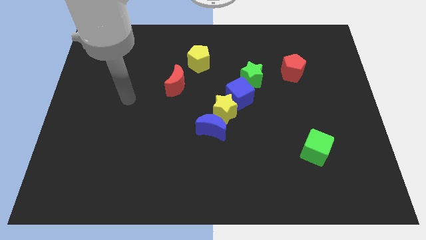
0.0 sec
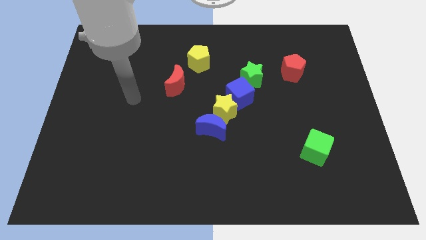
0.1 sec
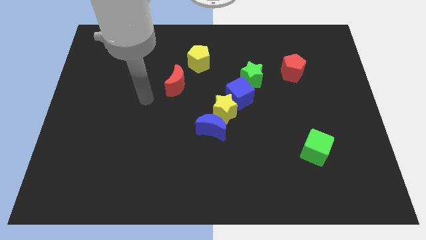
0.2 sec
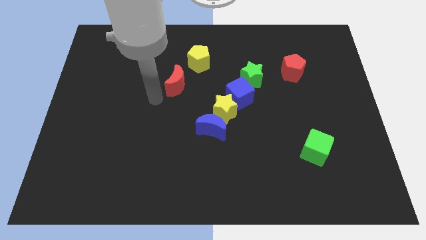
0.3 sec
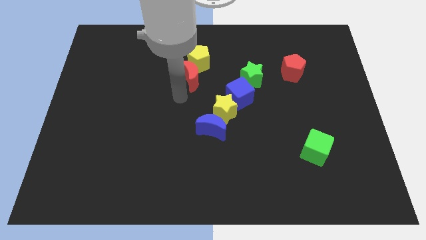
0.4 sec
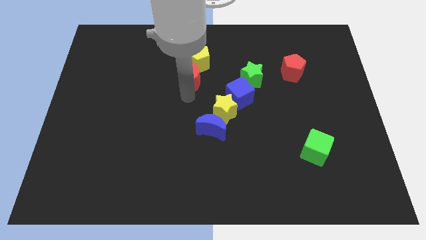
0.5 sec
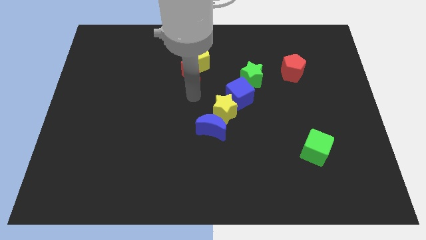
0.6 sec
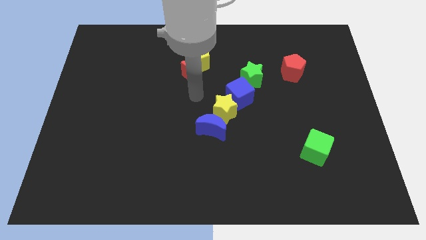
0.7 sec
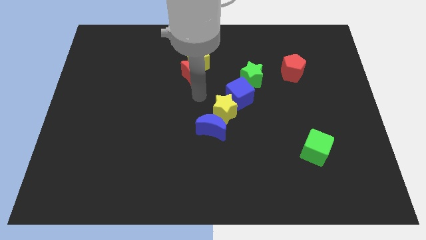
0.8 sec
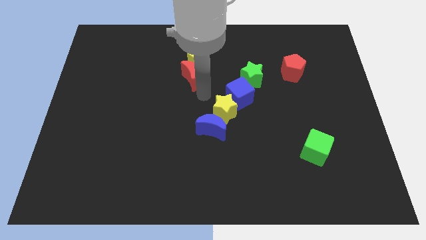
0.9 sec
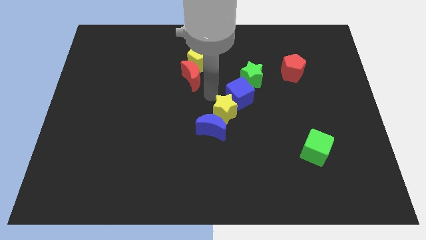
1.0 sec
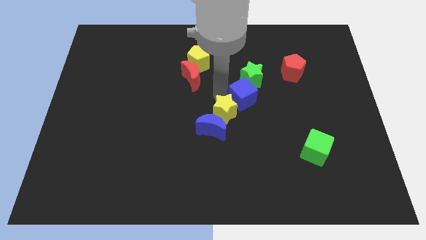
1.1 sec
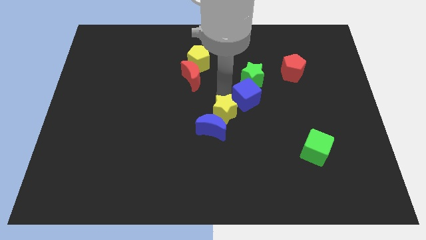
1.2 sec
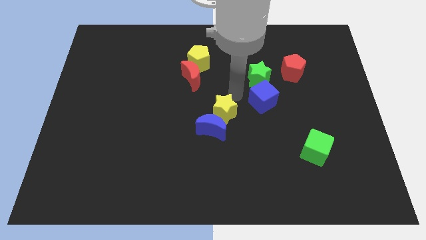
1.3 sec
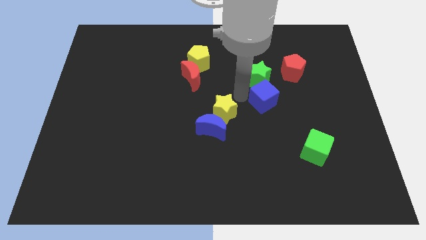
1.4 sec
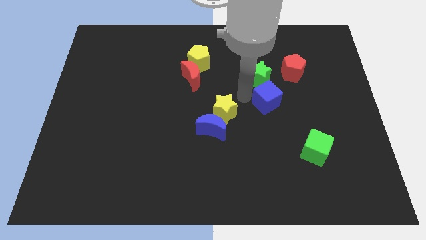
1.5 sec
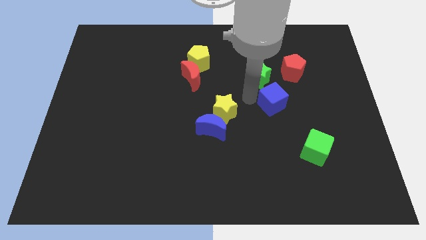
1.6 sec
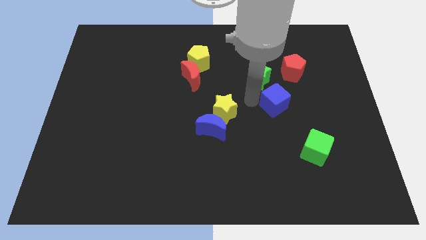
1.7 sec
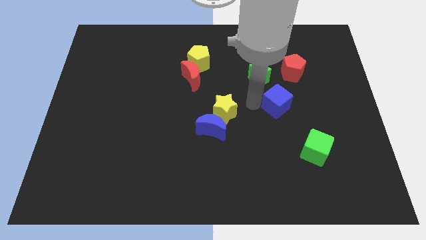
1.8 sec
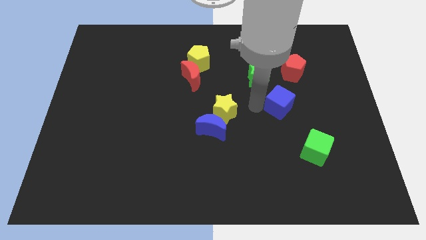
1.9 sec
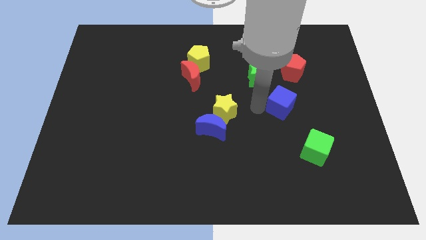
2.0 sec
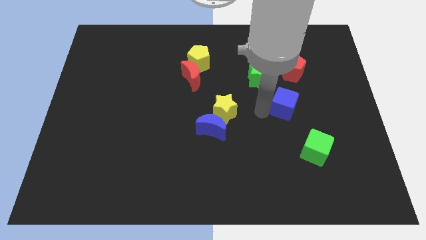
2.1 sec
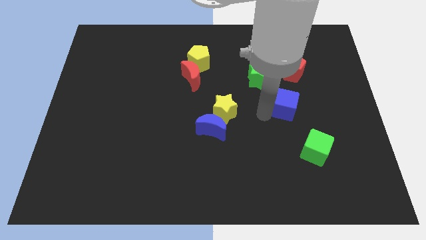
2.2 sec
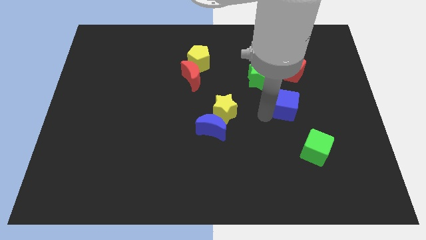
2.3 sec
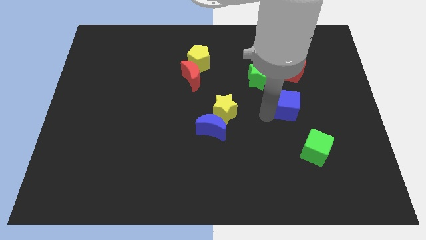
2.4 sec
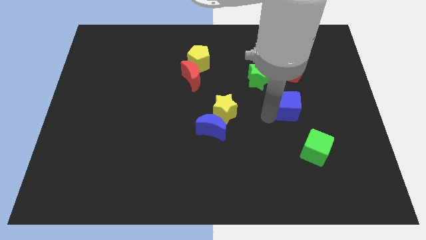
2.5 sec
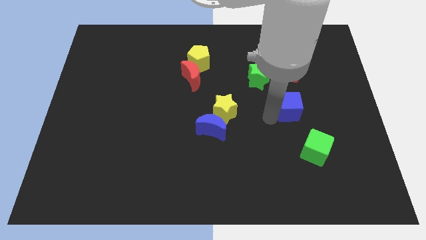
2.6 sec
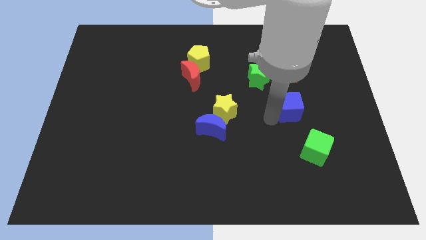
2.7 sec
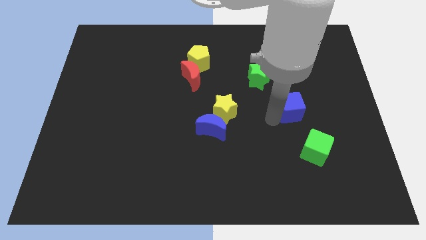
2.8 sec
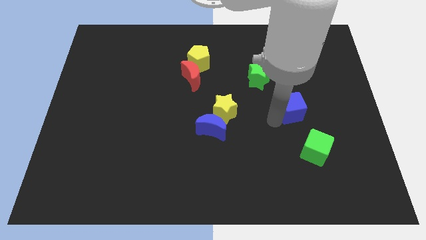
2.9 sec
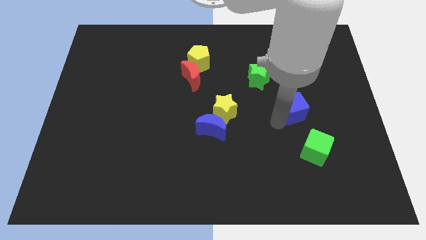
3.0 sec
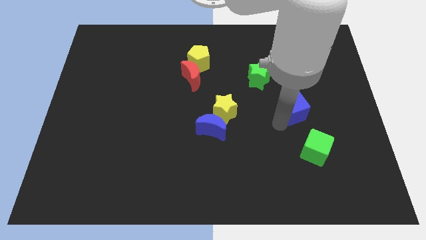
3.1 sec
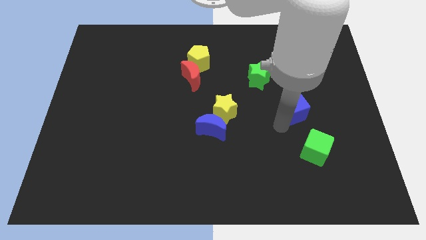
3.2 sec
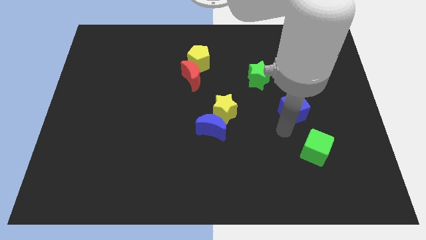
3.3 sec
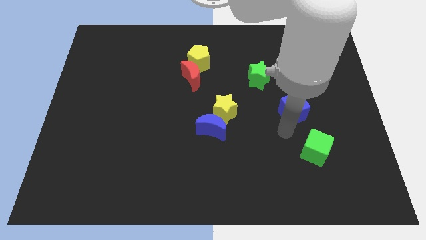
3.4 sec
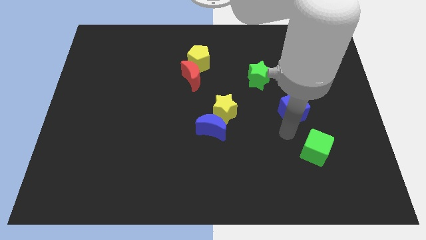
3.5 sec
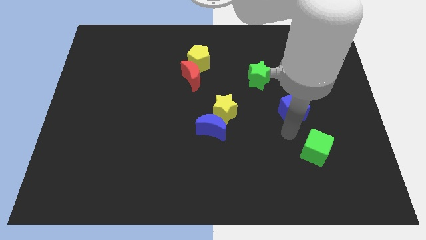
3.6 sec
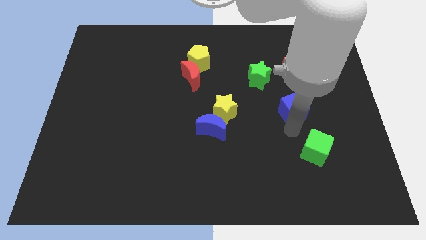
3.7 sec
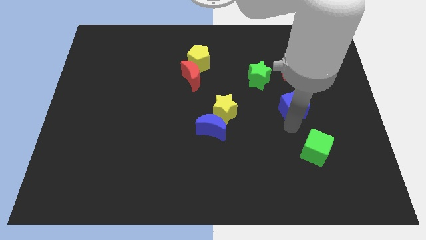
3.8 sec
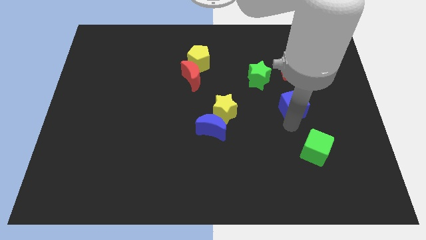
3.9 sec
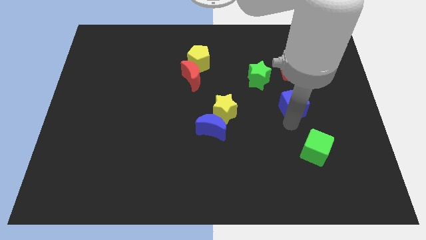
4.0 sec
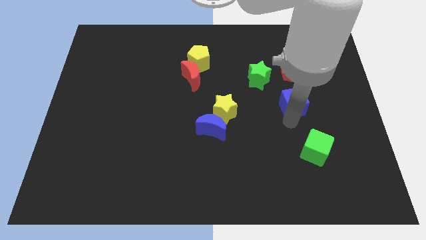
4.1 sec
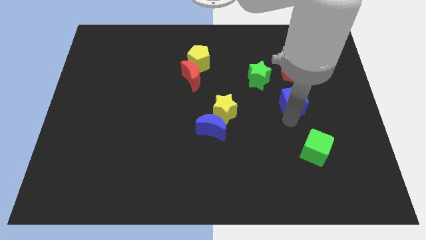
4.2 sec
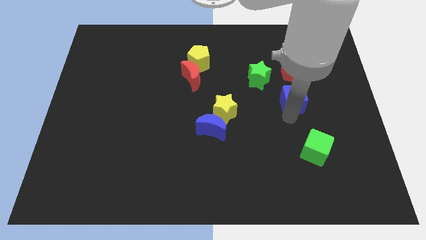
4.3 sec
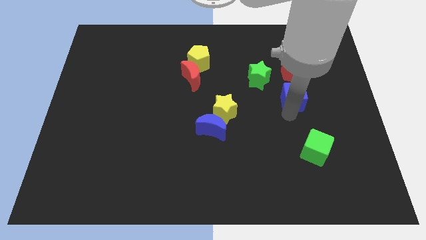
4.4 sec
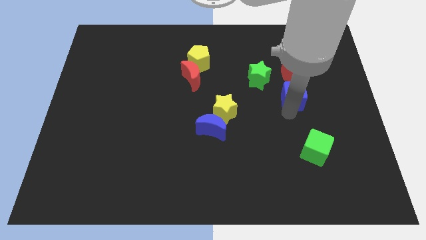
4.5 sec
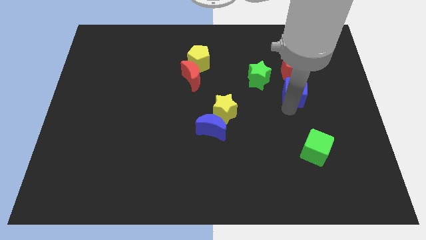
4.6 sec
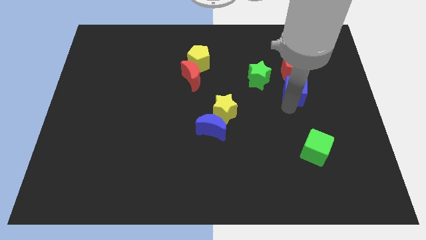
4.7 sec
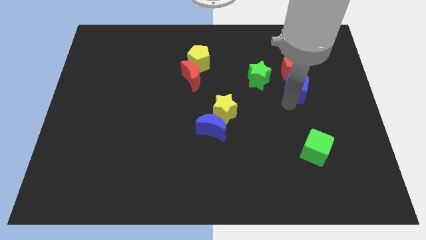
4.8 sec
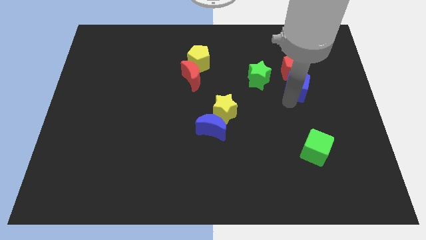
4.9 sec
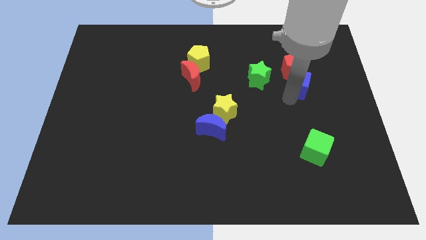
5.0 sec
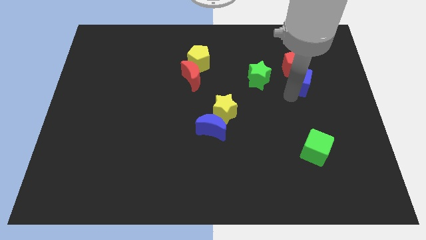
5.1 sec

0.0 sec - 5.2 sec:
put the blue cube to the red pentagon

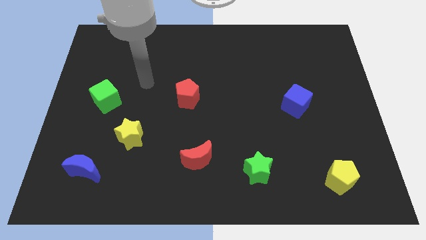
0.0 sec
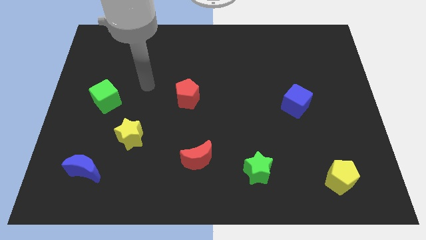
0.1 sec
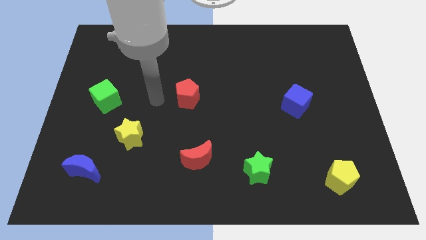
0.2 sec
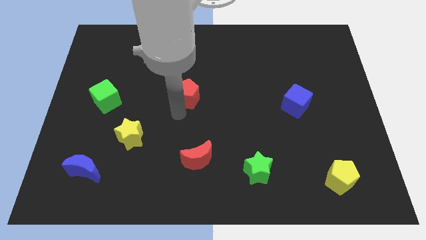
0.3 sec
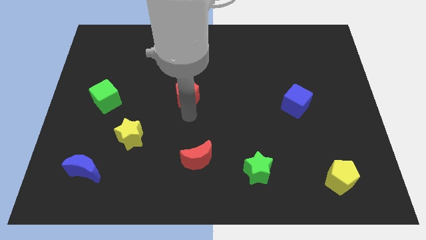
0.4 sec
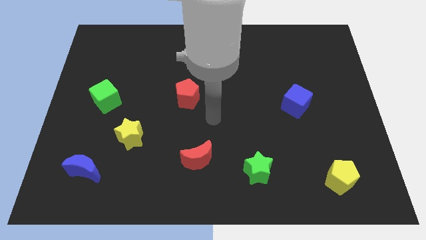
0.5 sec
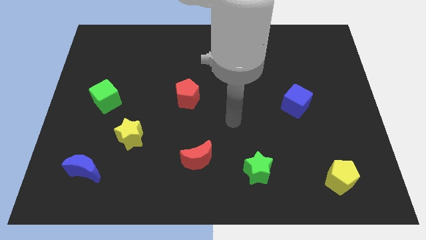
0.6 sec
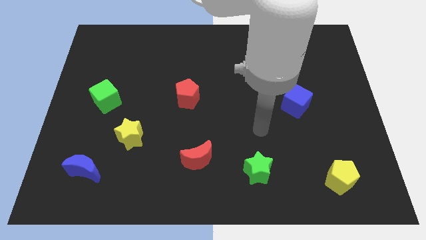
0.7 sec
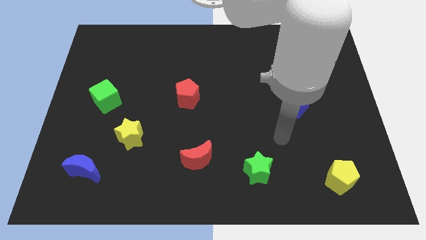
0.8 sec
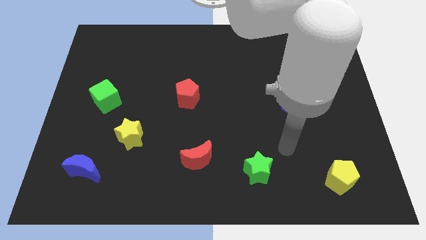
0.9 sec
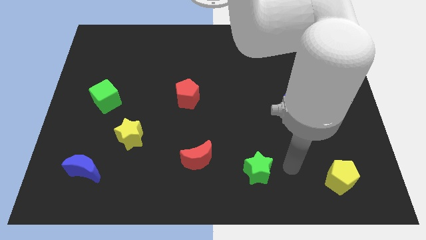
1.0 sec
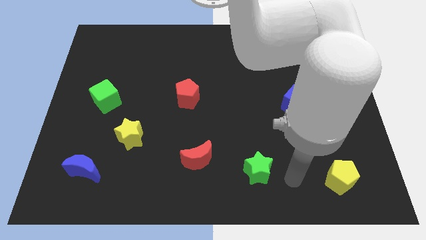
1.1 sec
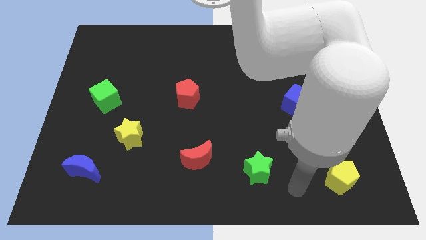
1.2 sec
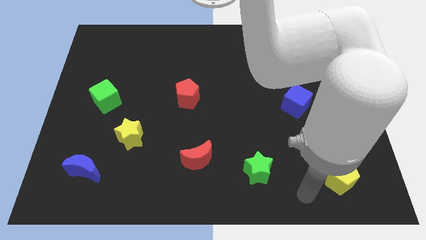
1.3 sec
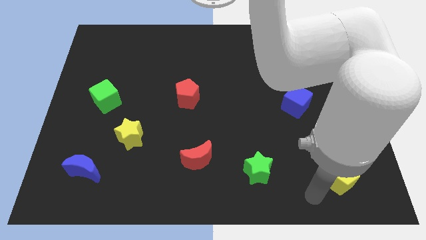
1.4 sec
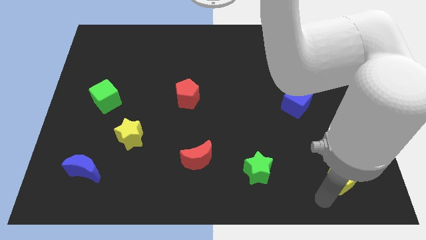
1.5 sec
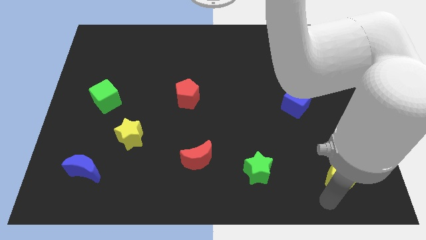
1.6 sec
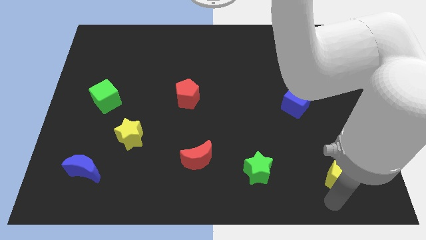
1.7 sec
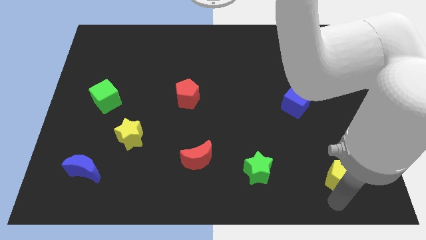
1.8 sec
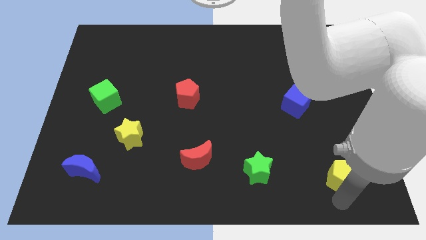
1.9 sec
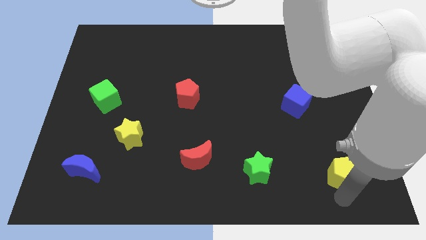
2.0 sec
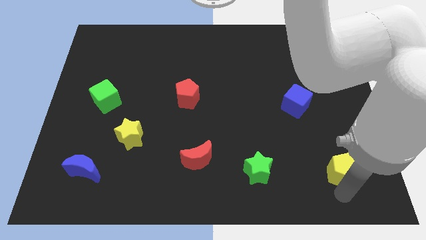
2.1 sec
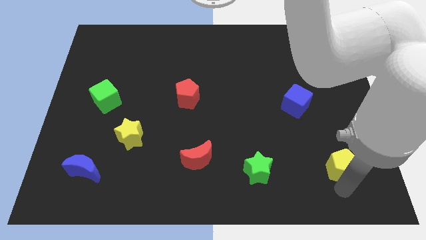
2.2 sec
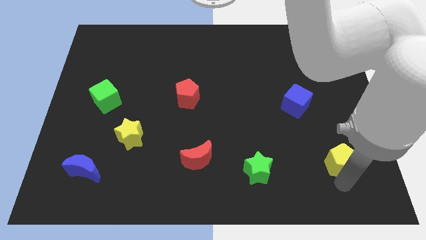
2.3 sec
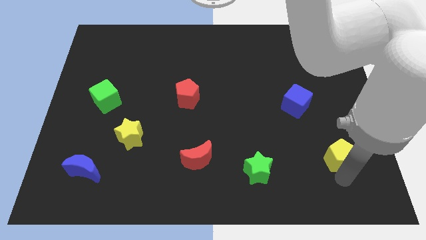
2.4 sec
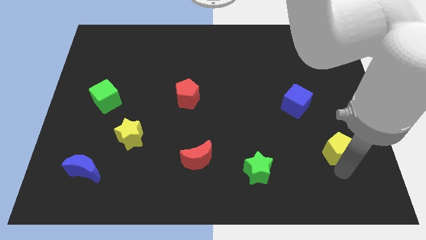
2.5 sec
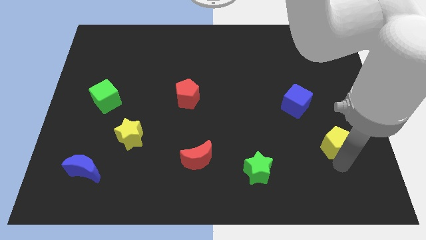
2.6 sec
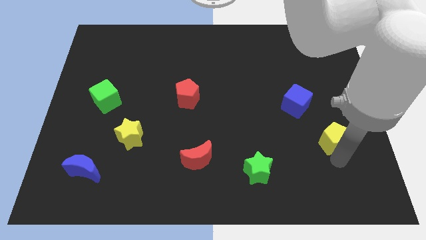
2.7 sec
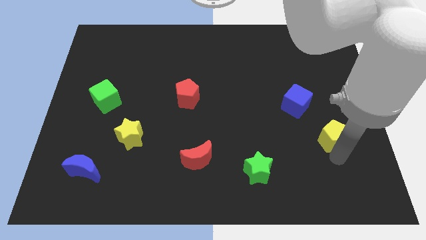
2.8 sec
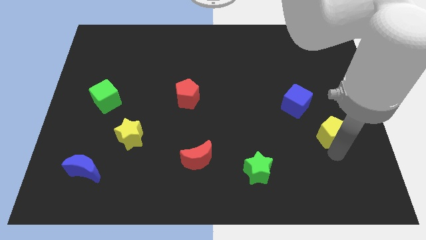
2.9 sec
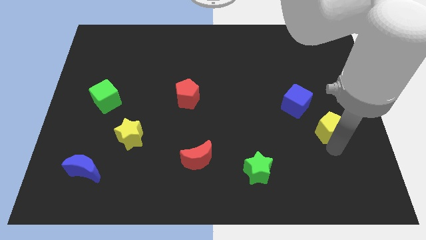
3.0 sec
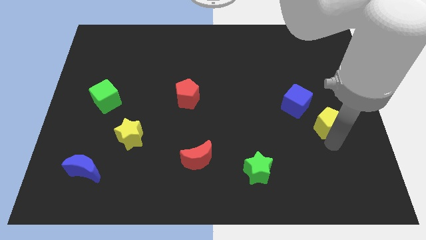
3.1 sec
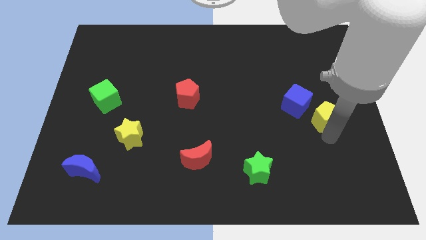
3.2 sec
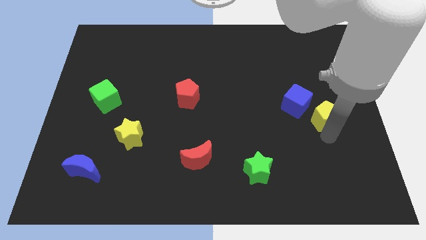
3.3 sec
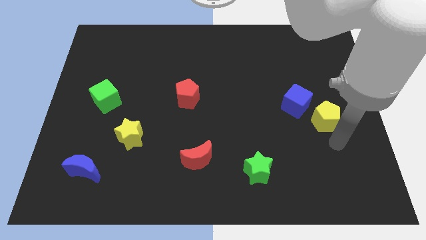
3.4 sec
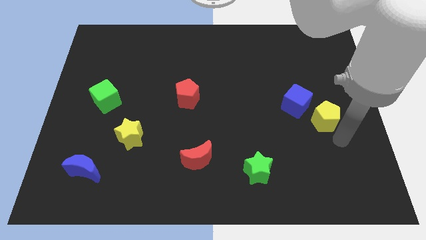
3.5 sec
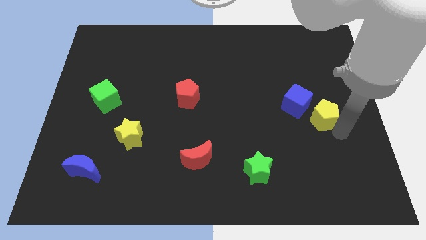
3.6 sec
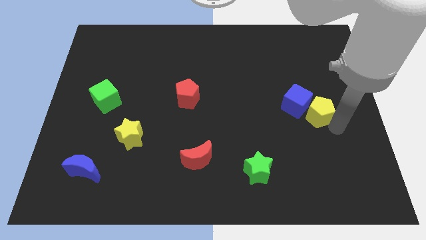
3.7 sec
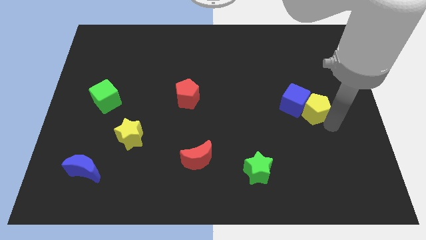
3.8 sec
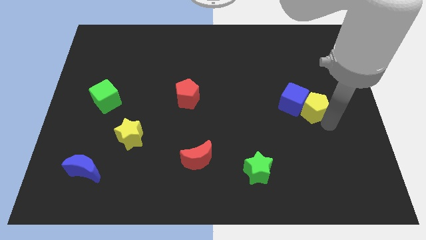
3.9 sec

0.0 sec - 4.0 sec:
slide the yellow pentagon close to the blue cube
